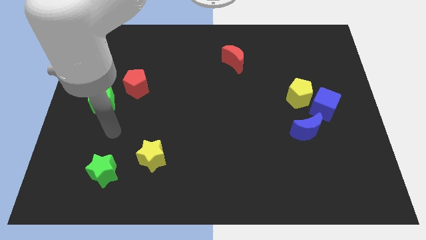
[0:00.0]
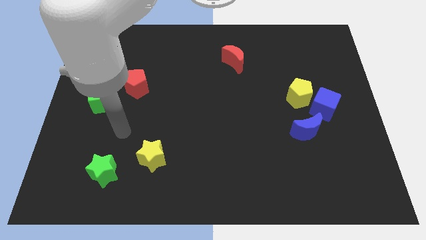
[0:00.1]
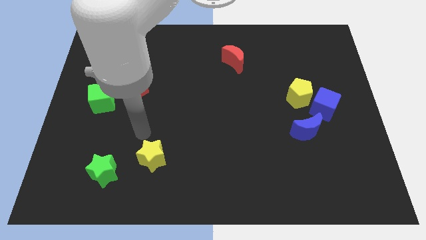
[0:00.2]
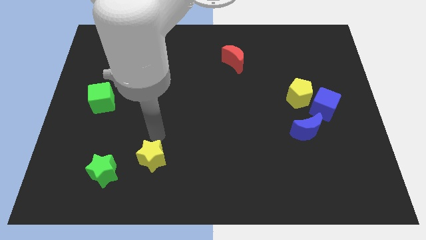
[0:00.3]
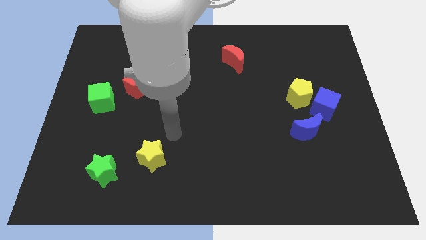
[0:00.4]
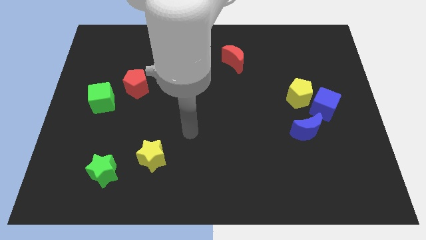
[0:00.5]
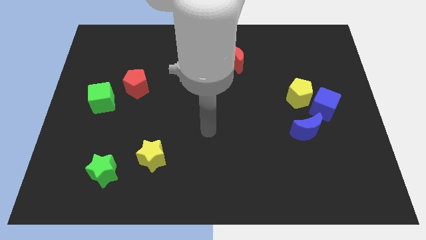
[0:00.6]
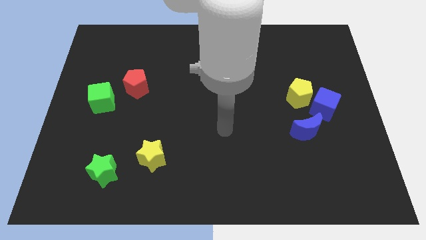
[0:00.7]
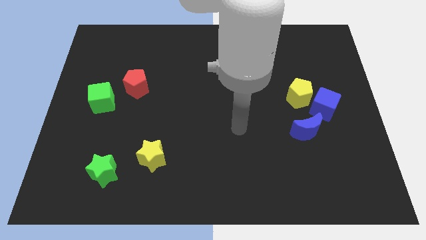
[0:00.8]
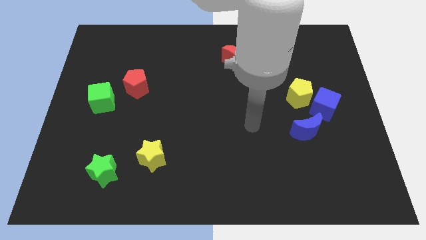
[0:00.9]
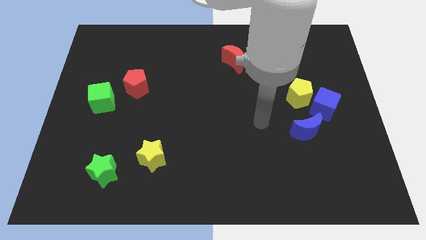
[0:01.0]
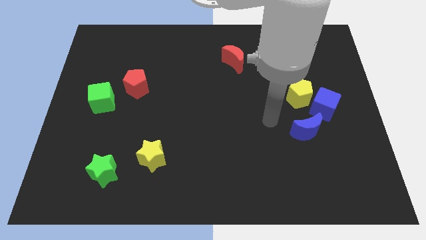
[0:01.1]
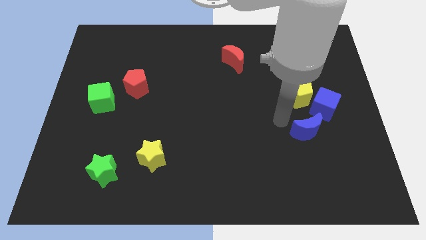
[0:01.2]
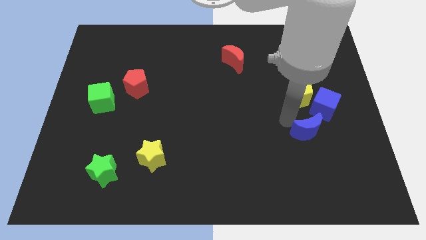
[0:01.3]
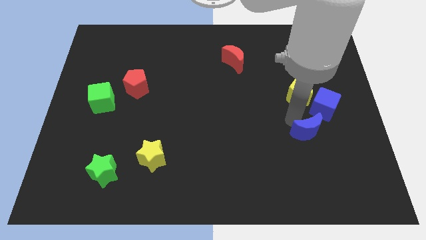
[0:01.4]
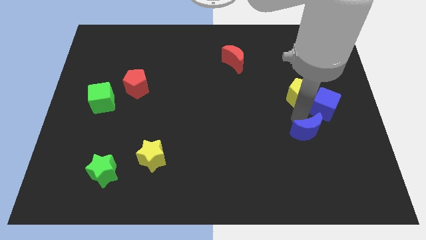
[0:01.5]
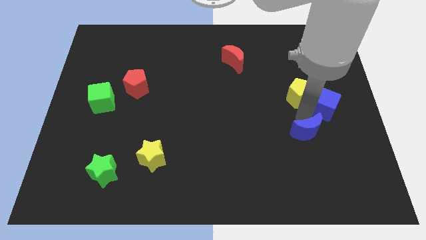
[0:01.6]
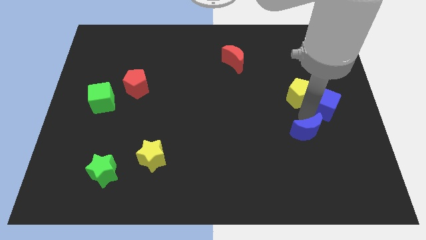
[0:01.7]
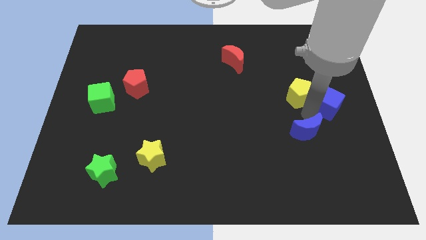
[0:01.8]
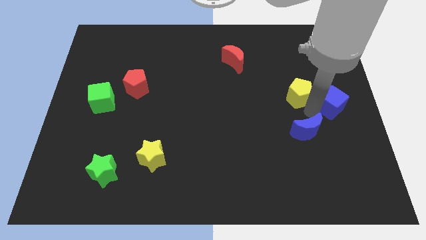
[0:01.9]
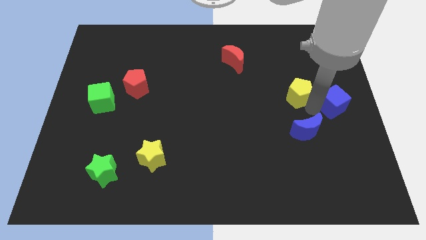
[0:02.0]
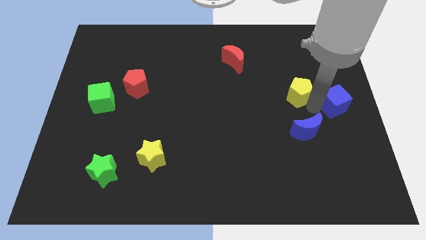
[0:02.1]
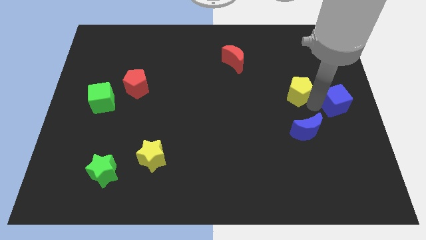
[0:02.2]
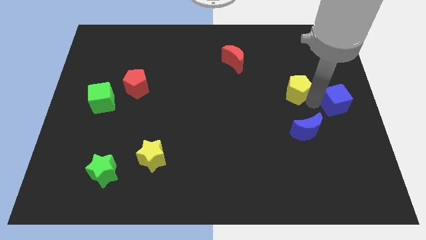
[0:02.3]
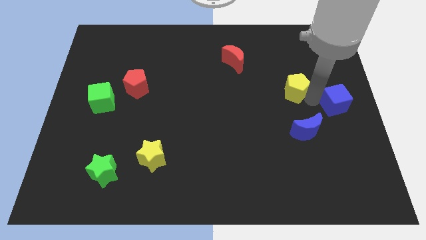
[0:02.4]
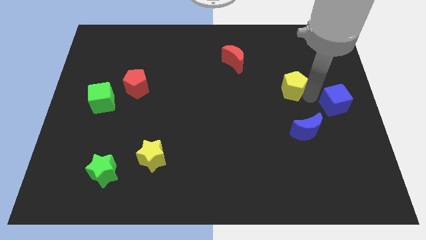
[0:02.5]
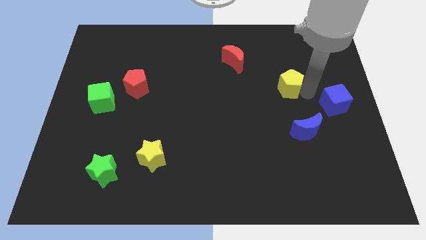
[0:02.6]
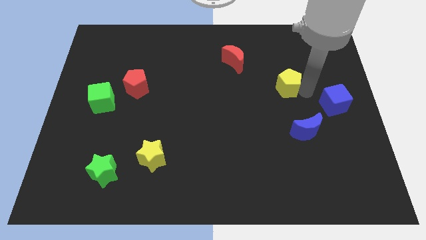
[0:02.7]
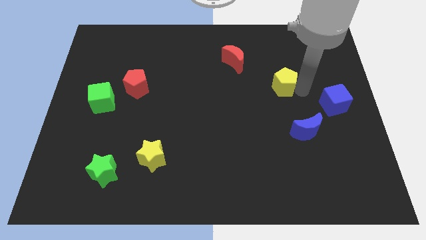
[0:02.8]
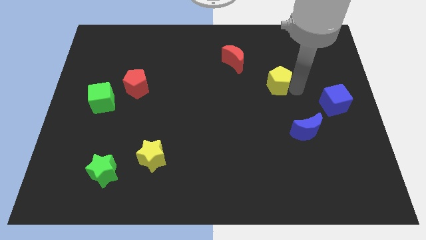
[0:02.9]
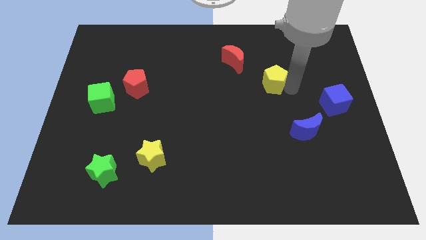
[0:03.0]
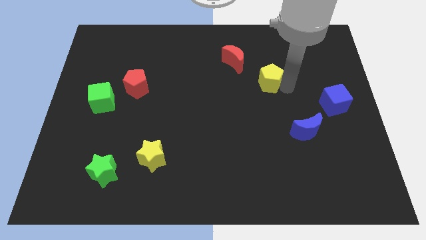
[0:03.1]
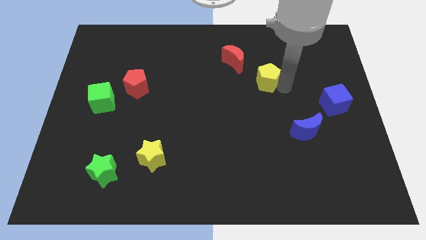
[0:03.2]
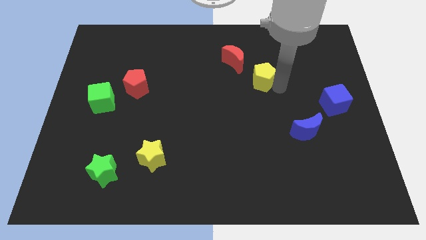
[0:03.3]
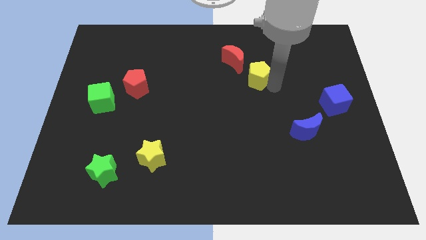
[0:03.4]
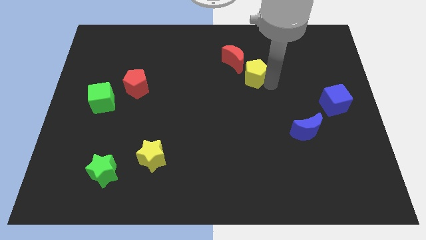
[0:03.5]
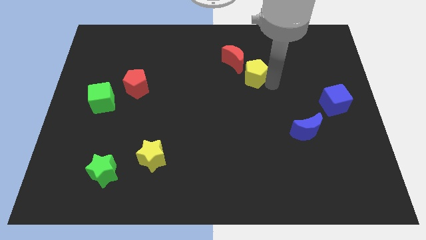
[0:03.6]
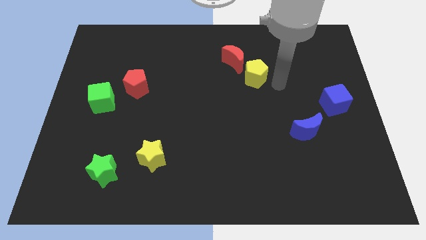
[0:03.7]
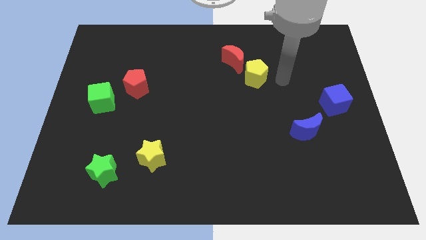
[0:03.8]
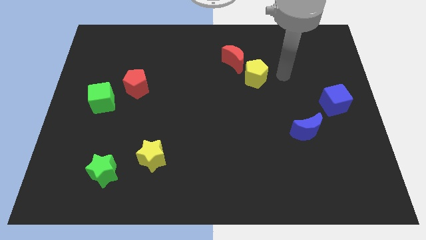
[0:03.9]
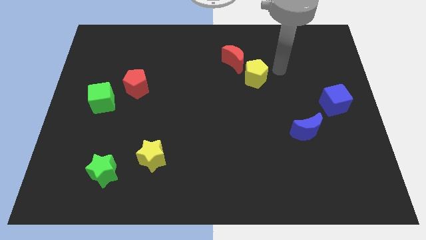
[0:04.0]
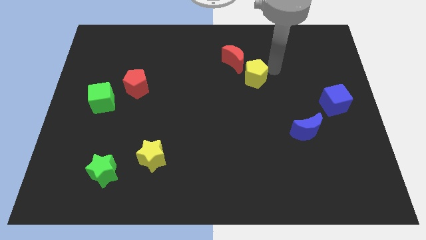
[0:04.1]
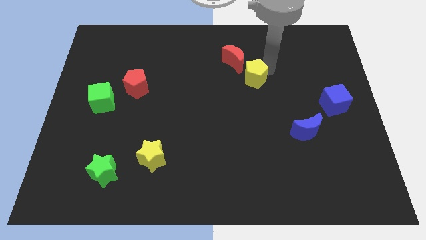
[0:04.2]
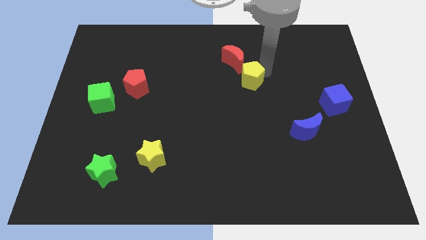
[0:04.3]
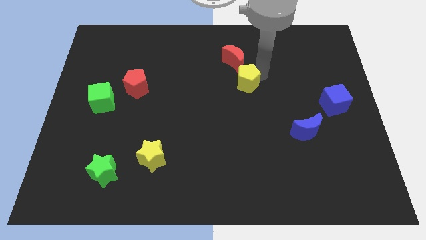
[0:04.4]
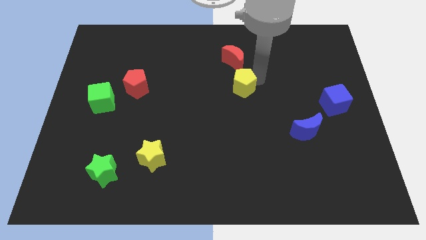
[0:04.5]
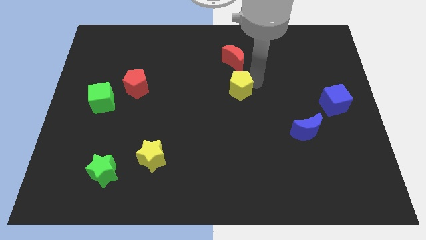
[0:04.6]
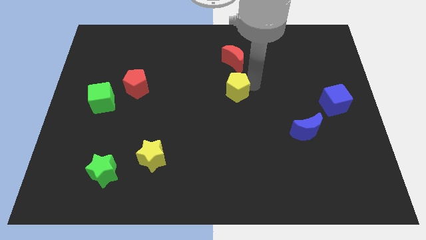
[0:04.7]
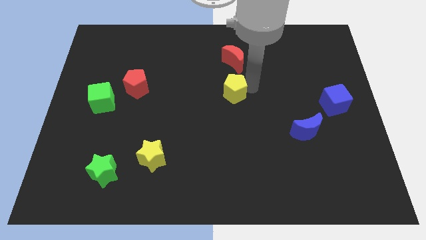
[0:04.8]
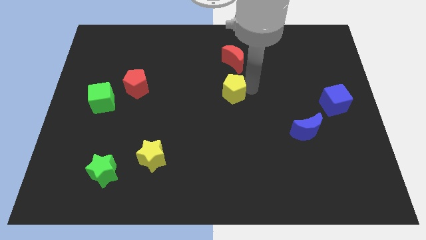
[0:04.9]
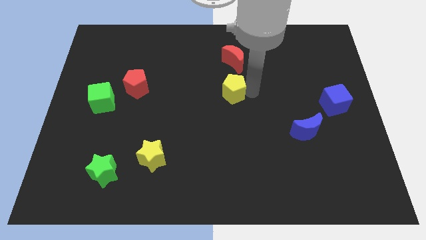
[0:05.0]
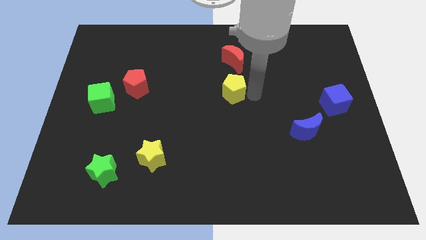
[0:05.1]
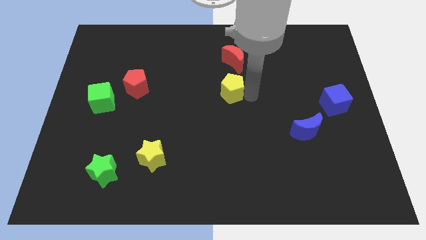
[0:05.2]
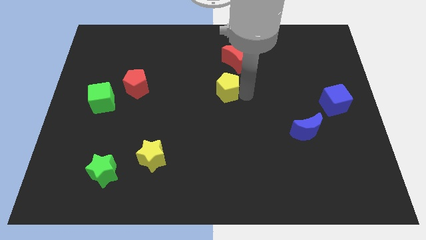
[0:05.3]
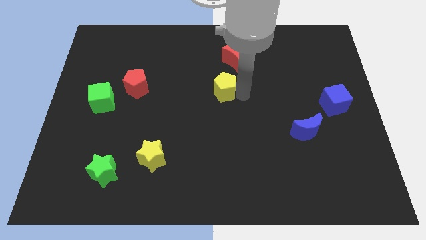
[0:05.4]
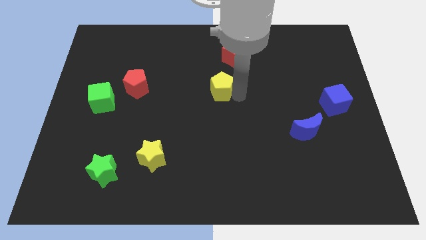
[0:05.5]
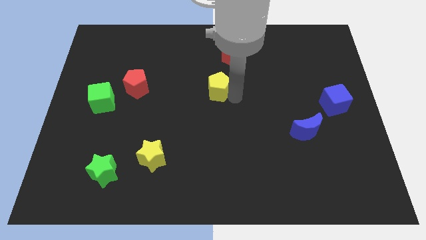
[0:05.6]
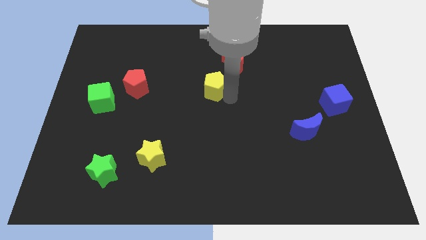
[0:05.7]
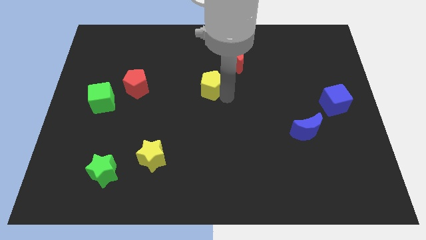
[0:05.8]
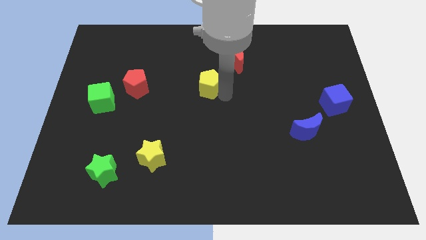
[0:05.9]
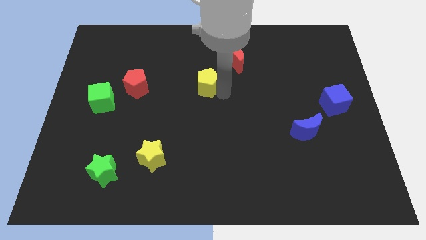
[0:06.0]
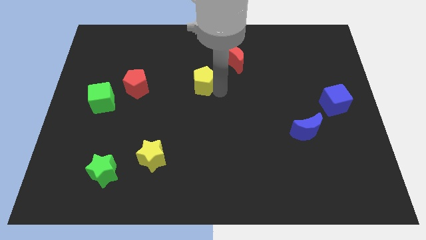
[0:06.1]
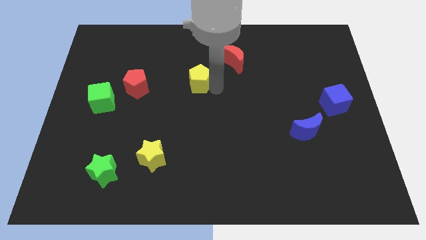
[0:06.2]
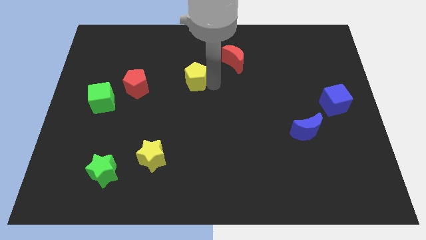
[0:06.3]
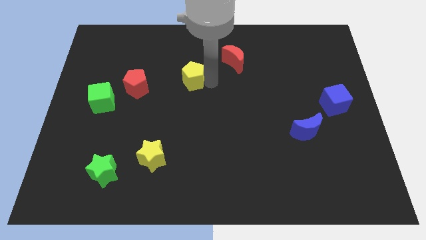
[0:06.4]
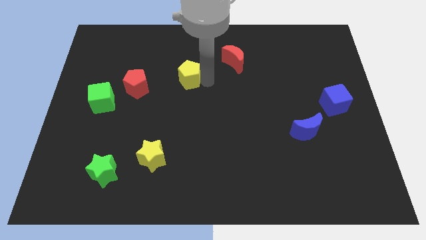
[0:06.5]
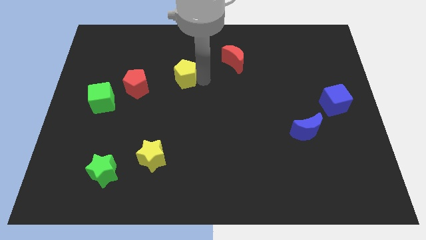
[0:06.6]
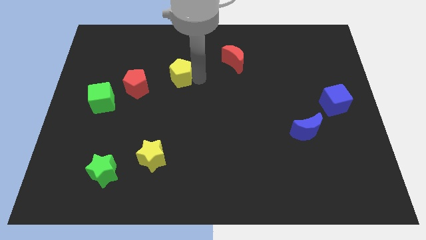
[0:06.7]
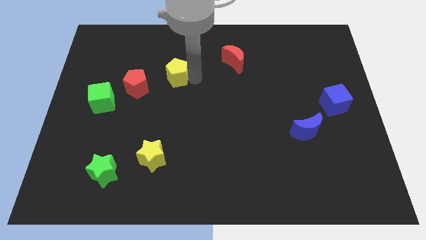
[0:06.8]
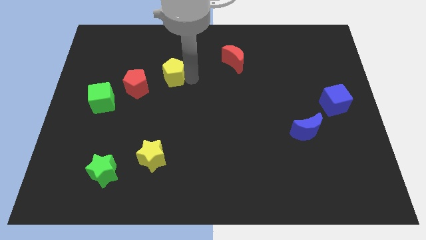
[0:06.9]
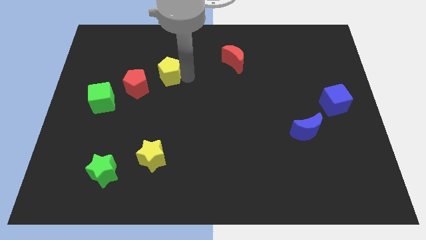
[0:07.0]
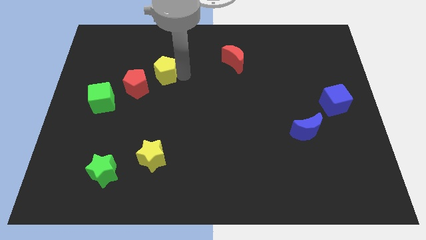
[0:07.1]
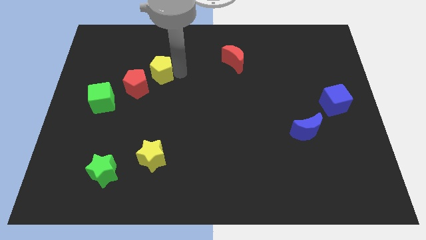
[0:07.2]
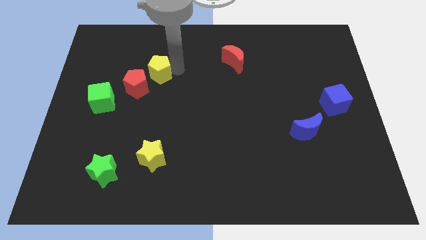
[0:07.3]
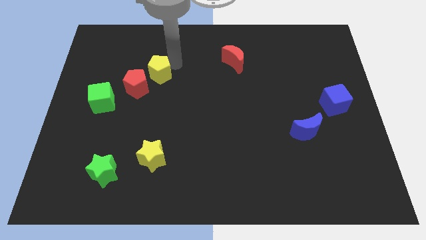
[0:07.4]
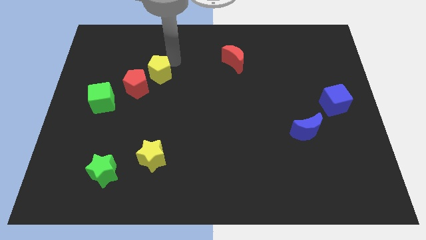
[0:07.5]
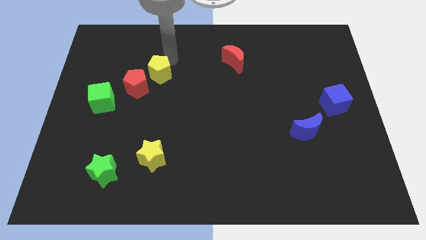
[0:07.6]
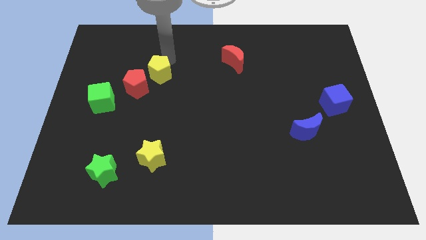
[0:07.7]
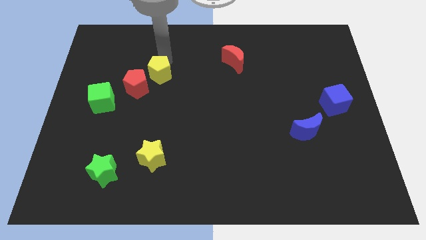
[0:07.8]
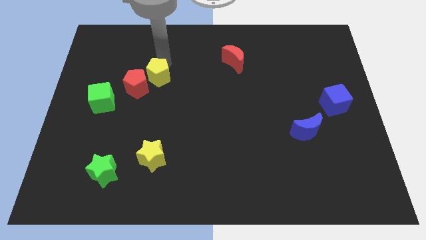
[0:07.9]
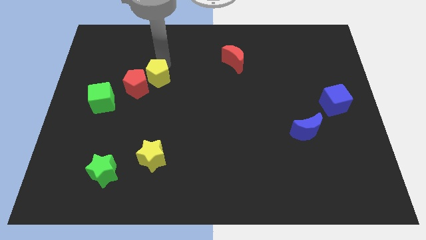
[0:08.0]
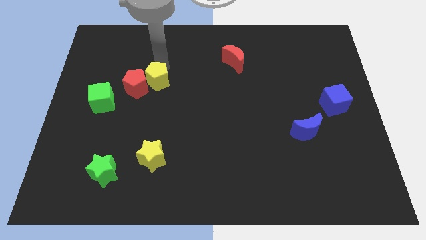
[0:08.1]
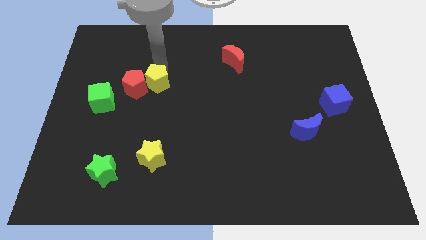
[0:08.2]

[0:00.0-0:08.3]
move the yellow pentagon close to the red pentagon

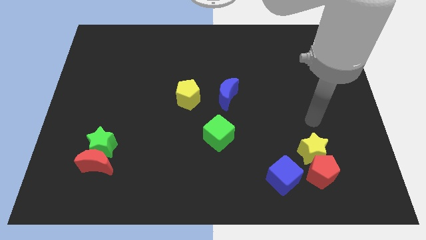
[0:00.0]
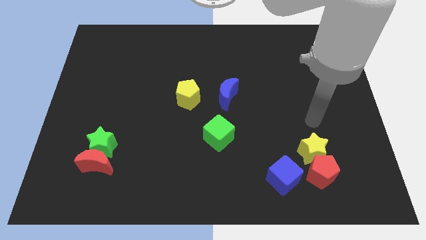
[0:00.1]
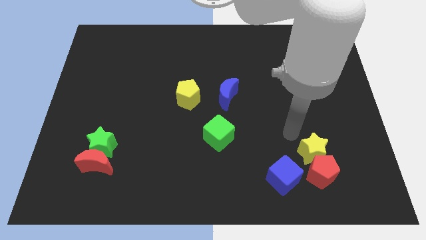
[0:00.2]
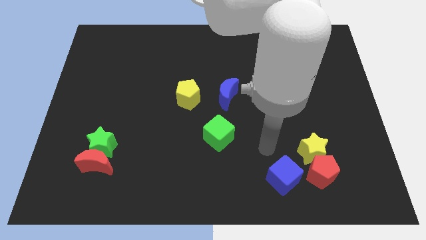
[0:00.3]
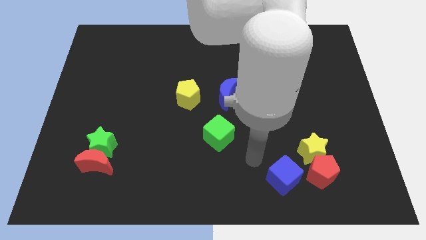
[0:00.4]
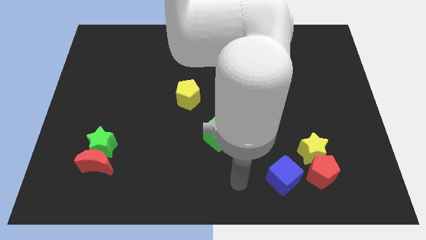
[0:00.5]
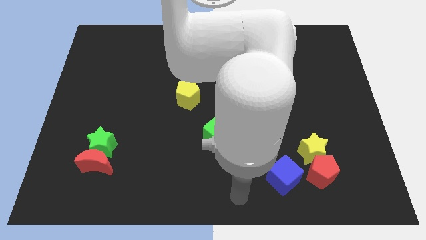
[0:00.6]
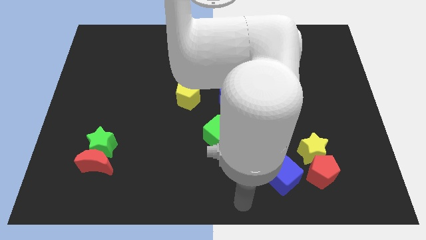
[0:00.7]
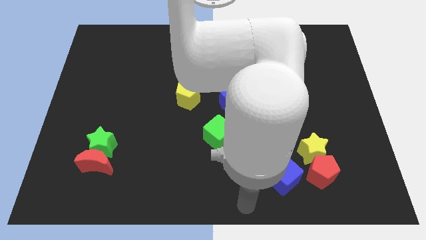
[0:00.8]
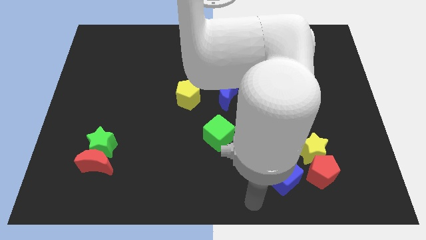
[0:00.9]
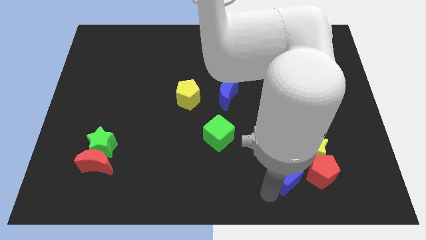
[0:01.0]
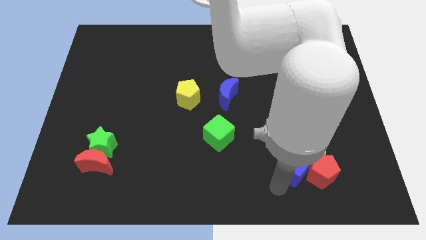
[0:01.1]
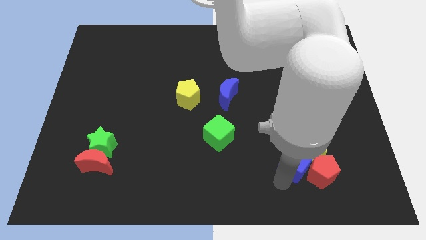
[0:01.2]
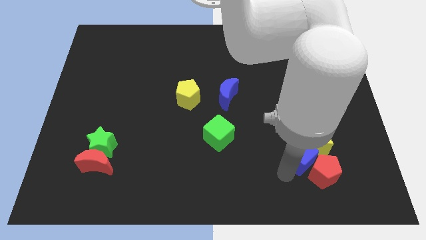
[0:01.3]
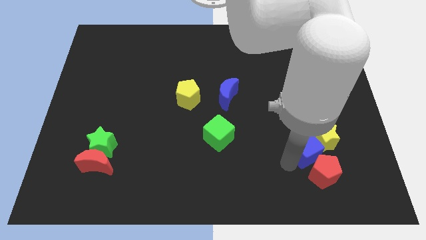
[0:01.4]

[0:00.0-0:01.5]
push the blue cube towards the yellow star
